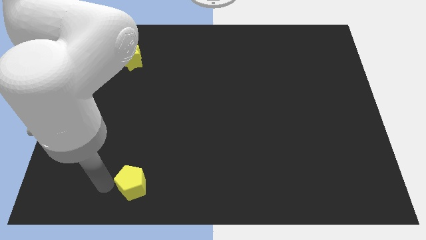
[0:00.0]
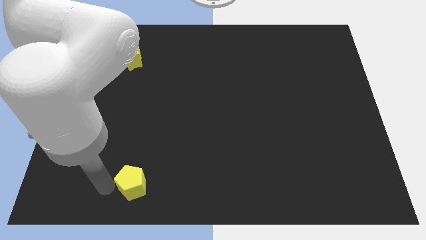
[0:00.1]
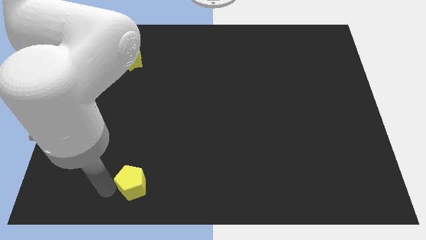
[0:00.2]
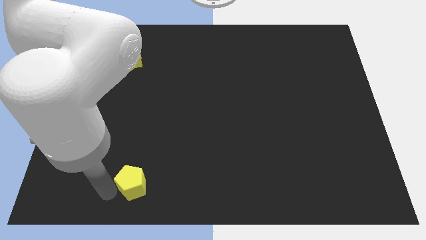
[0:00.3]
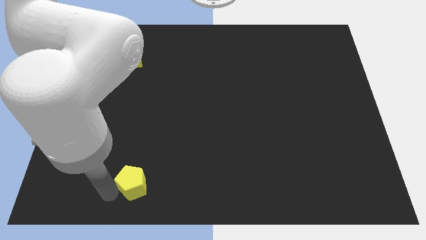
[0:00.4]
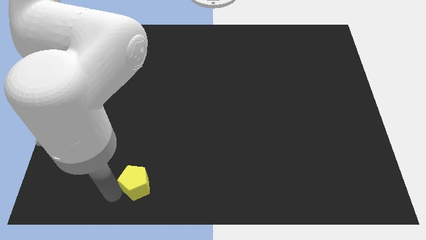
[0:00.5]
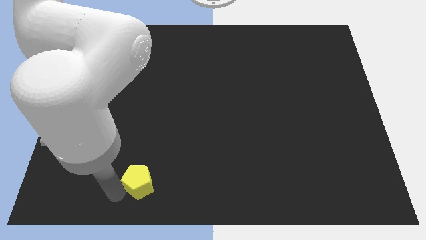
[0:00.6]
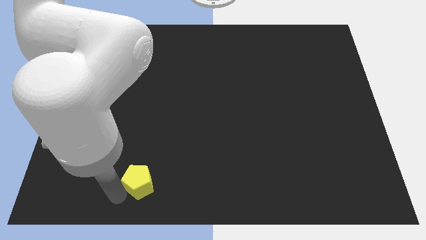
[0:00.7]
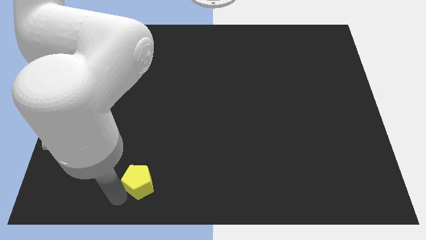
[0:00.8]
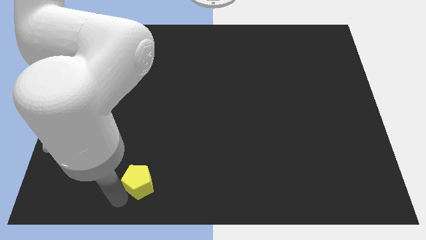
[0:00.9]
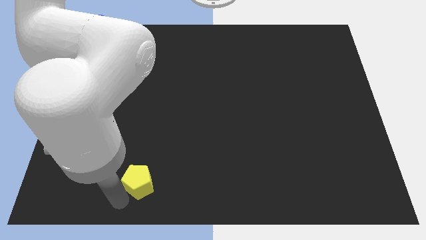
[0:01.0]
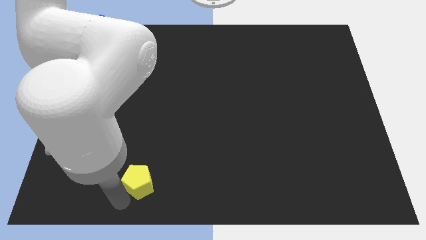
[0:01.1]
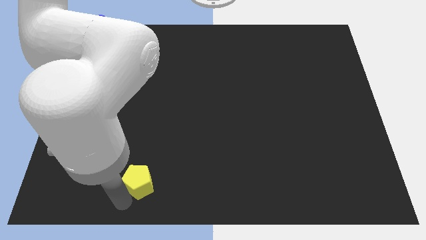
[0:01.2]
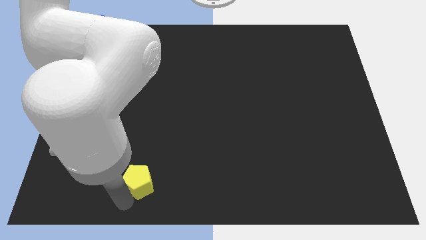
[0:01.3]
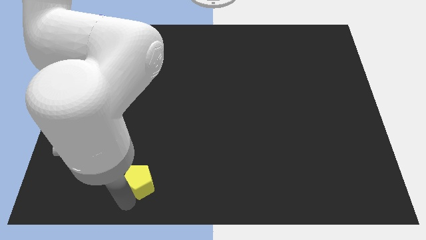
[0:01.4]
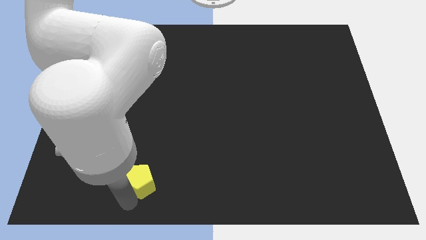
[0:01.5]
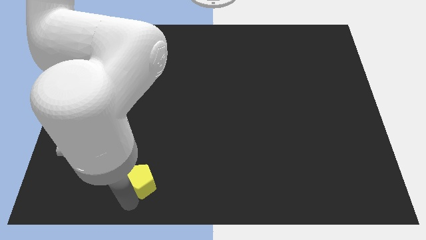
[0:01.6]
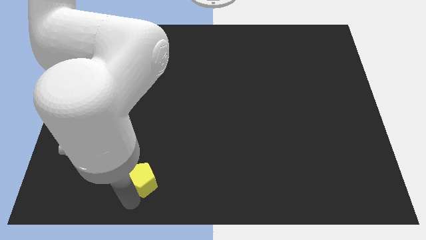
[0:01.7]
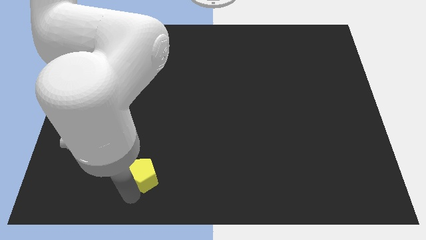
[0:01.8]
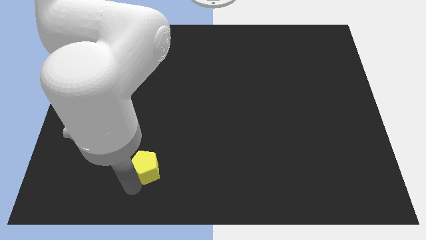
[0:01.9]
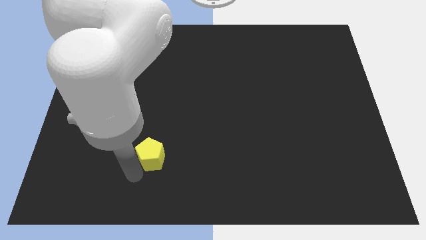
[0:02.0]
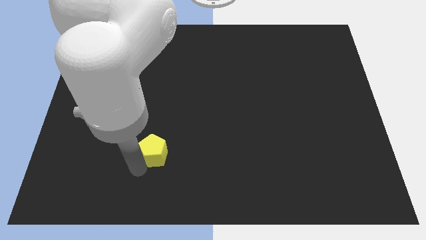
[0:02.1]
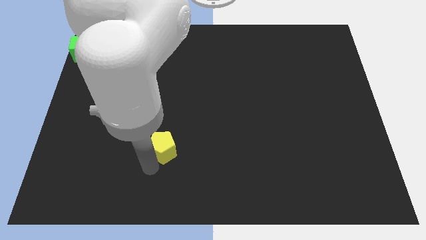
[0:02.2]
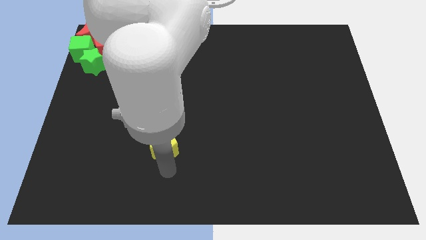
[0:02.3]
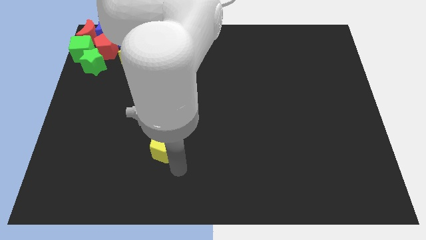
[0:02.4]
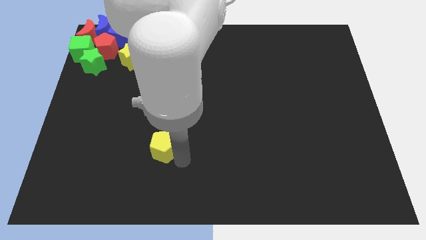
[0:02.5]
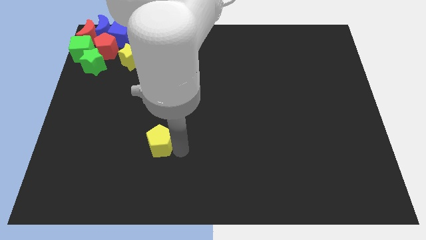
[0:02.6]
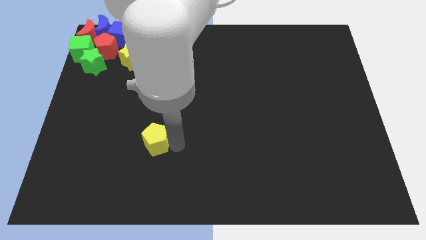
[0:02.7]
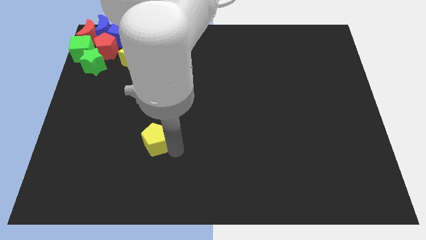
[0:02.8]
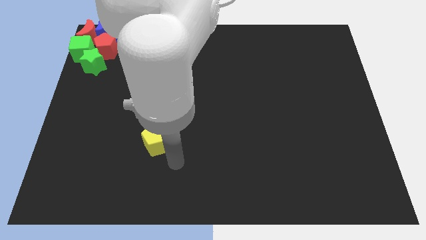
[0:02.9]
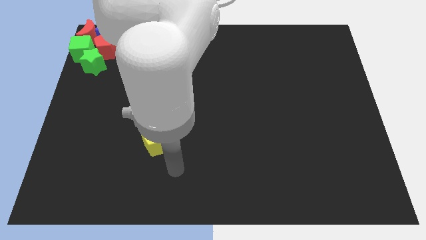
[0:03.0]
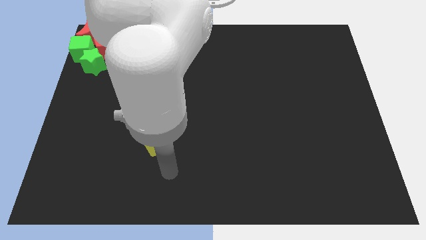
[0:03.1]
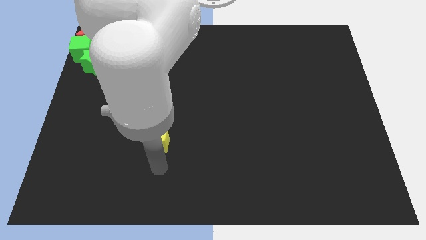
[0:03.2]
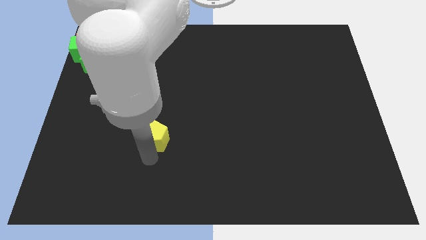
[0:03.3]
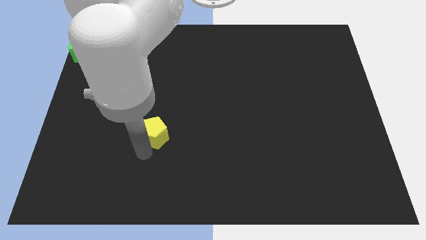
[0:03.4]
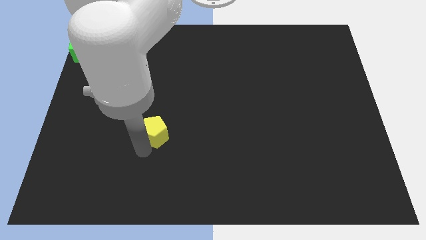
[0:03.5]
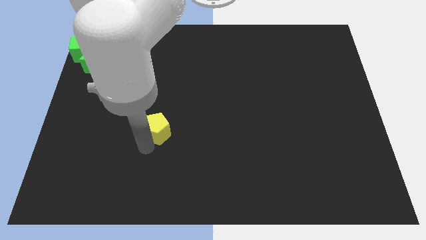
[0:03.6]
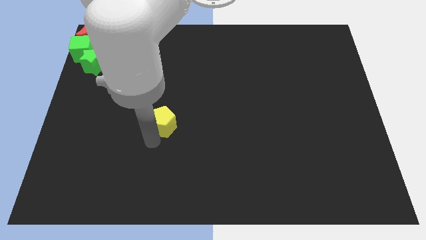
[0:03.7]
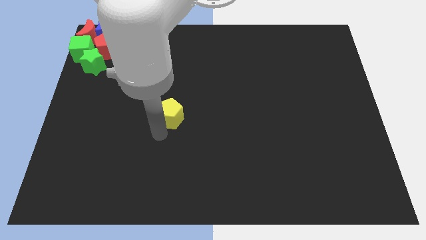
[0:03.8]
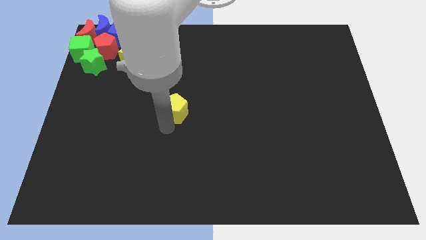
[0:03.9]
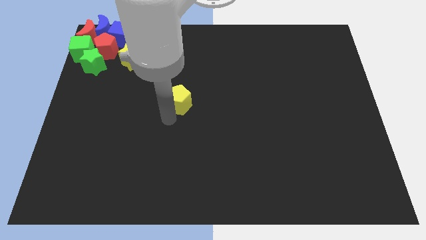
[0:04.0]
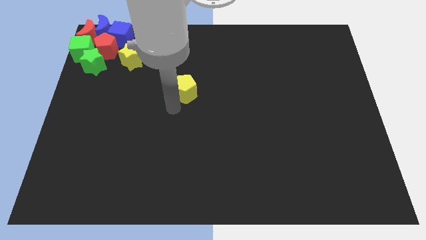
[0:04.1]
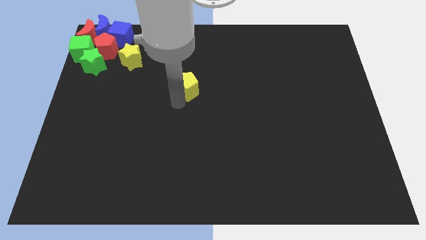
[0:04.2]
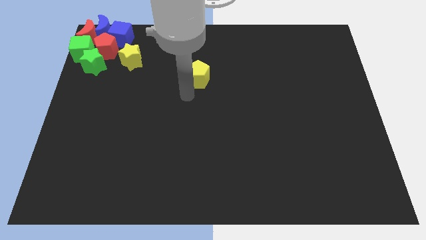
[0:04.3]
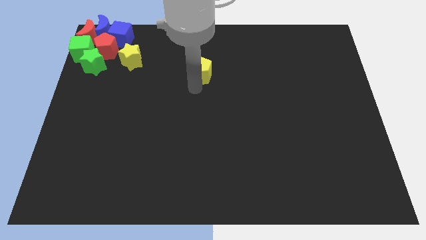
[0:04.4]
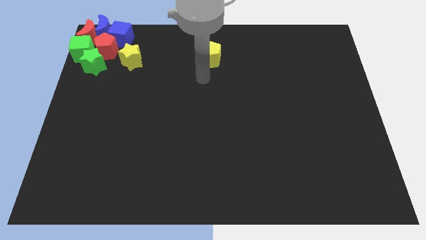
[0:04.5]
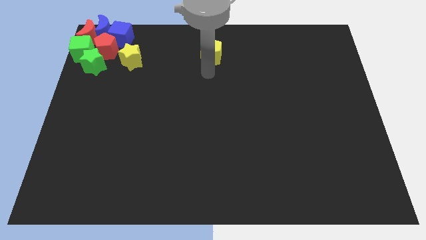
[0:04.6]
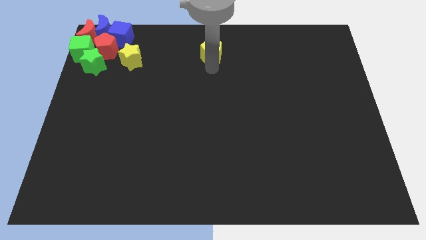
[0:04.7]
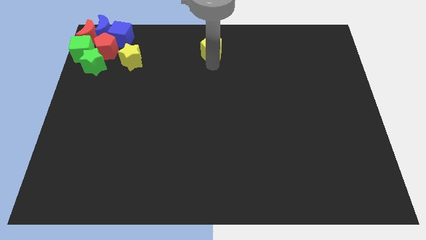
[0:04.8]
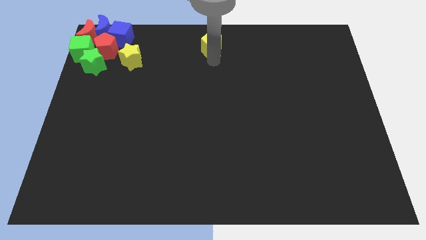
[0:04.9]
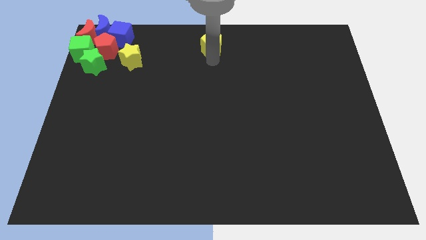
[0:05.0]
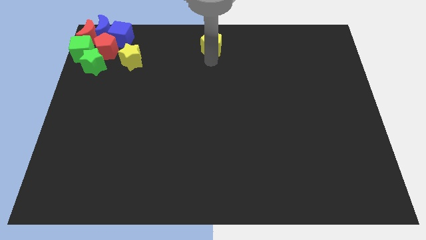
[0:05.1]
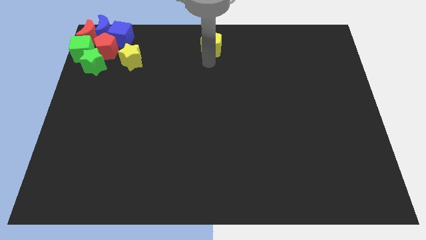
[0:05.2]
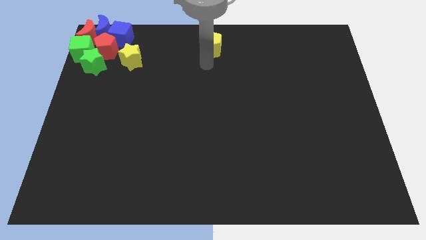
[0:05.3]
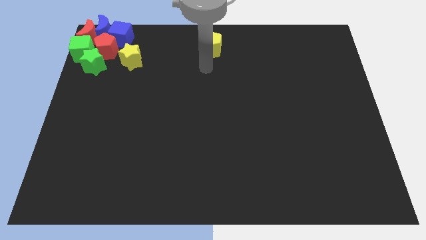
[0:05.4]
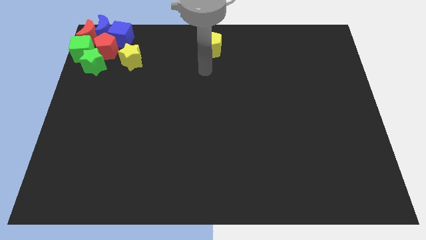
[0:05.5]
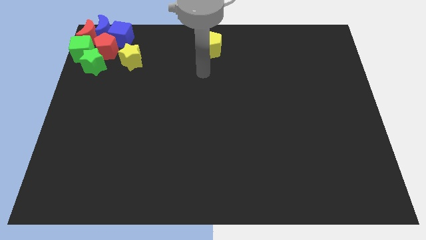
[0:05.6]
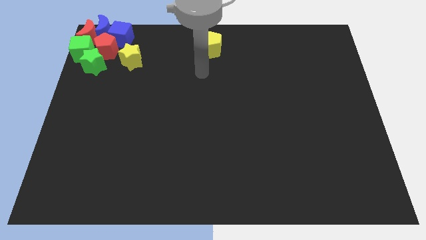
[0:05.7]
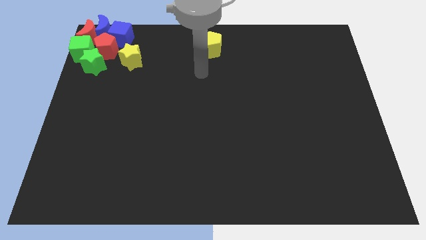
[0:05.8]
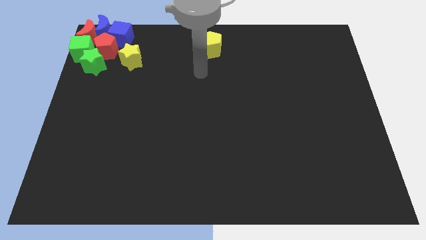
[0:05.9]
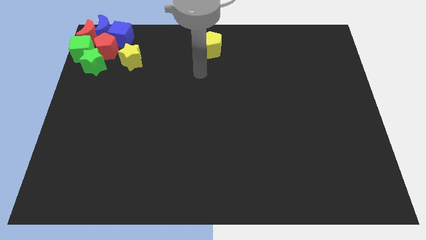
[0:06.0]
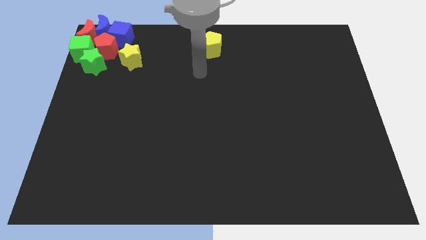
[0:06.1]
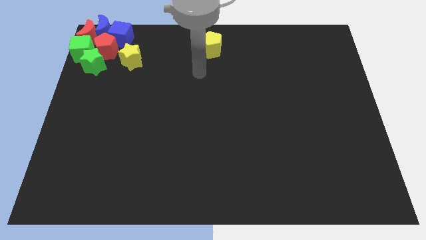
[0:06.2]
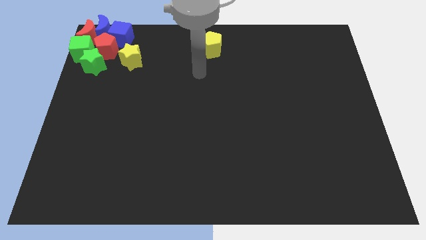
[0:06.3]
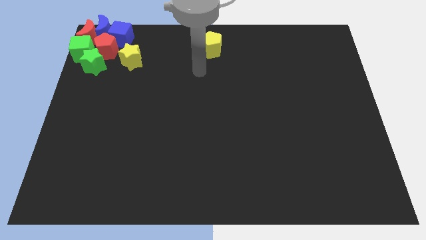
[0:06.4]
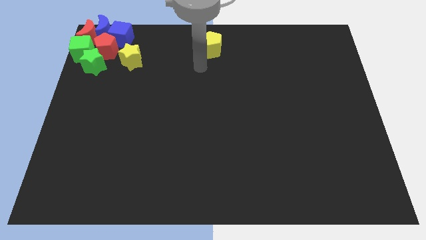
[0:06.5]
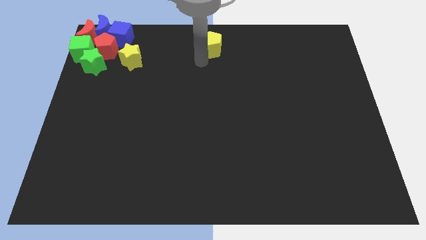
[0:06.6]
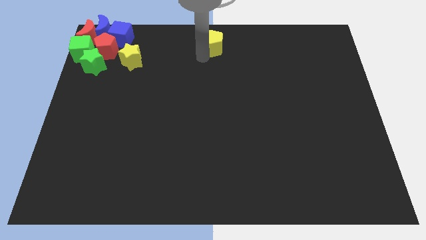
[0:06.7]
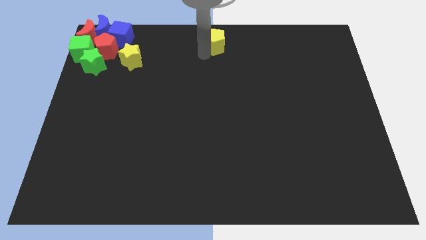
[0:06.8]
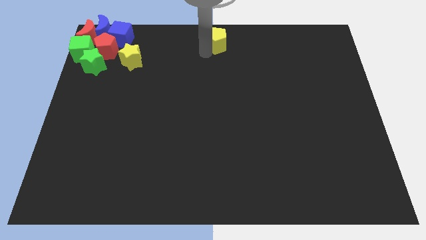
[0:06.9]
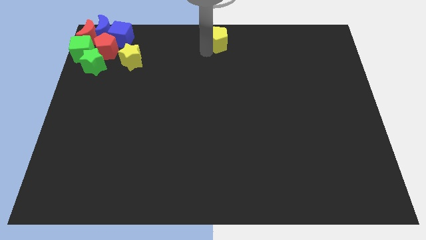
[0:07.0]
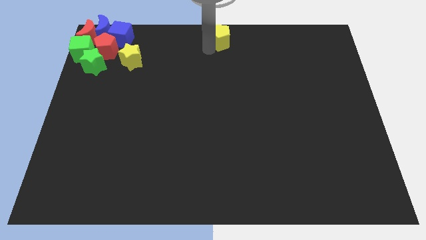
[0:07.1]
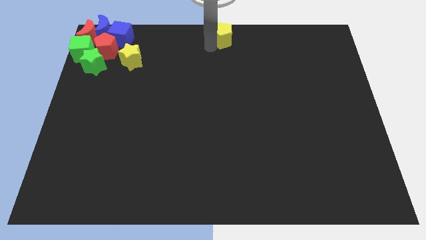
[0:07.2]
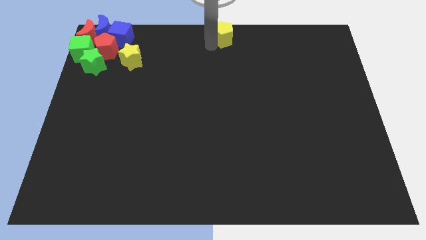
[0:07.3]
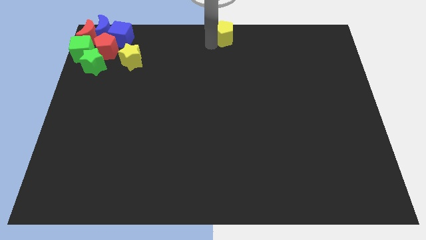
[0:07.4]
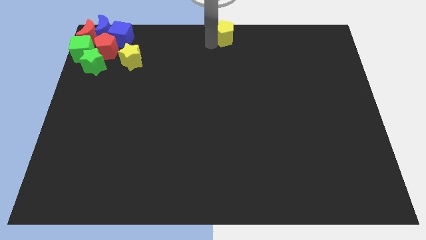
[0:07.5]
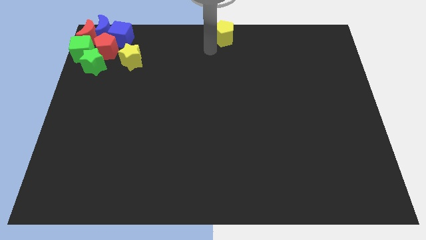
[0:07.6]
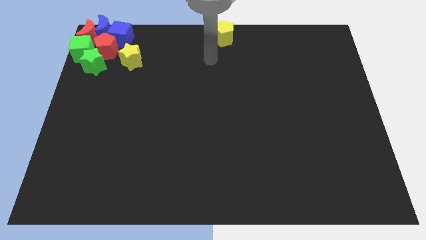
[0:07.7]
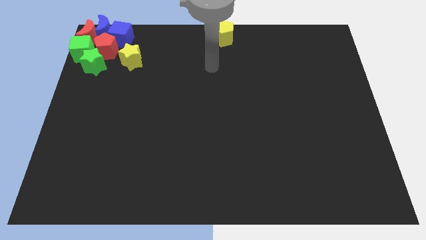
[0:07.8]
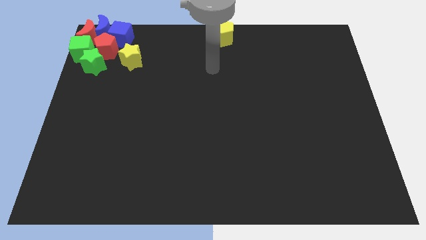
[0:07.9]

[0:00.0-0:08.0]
slide the yellow pentagon to the top center of the board

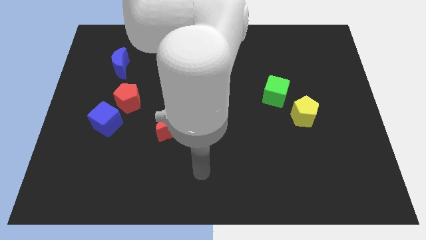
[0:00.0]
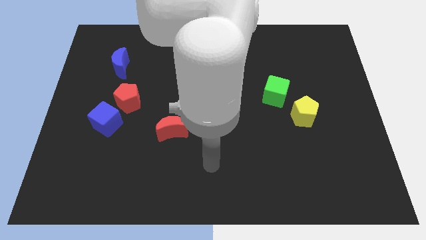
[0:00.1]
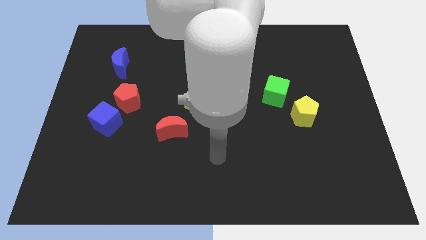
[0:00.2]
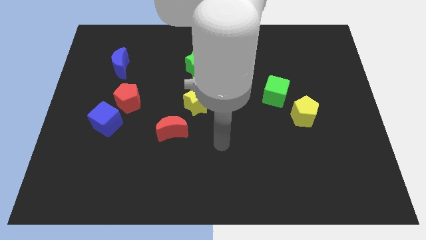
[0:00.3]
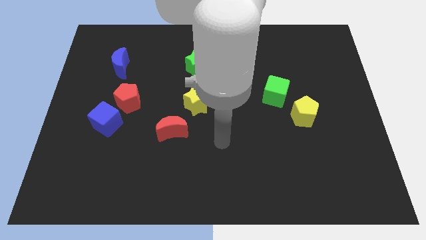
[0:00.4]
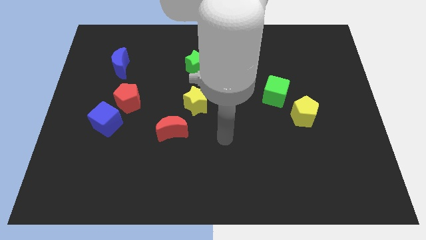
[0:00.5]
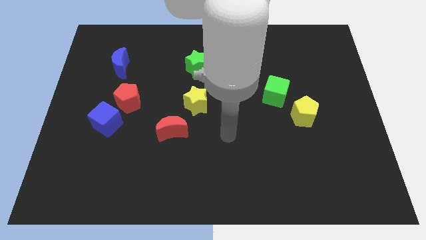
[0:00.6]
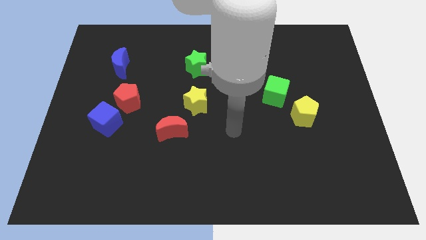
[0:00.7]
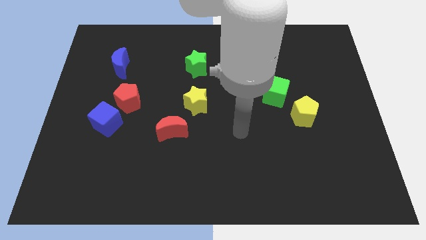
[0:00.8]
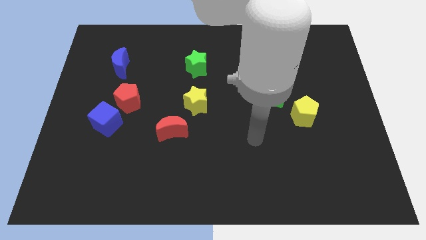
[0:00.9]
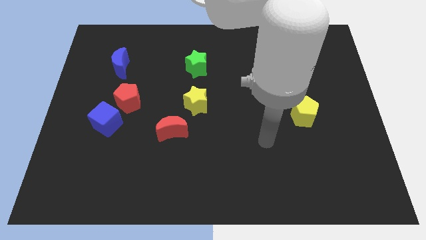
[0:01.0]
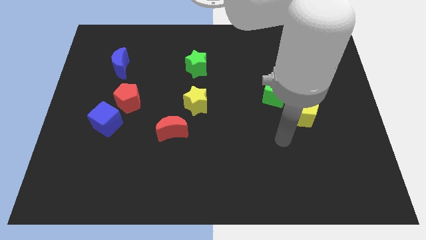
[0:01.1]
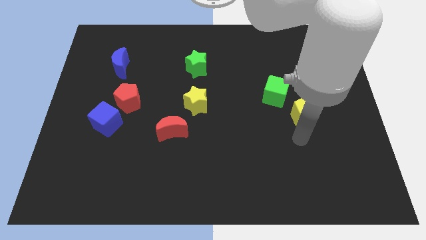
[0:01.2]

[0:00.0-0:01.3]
place your hand below the green cube
